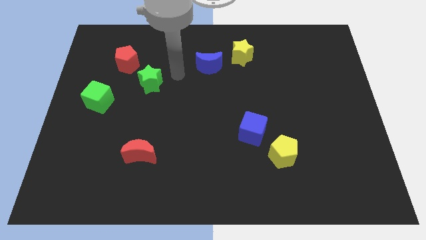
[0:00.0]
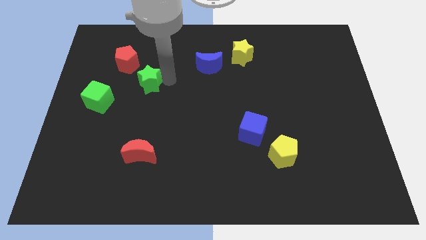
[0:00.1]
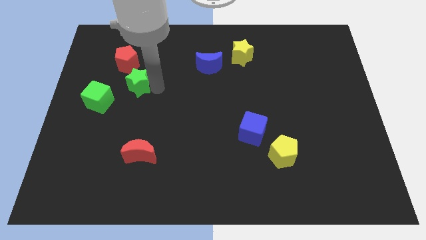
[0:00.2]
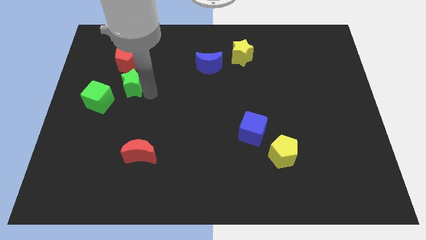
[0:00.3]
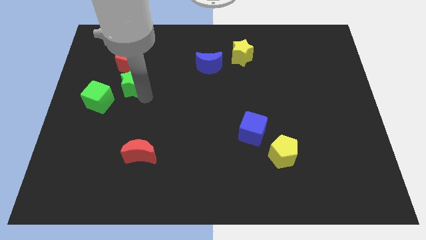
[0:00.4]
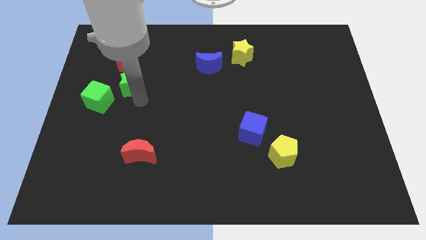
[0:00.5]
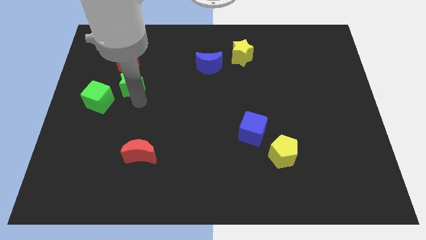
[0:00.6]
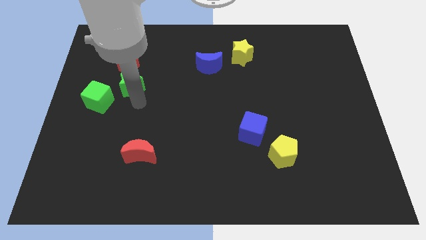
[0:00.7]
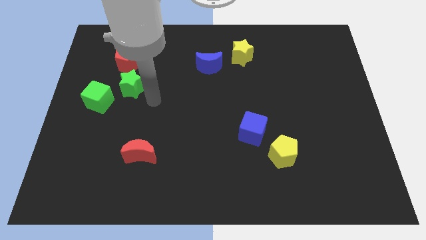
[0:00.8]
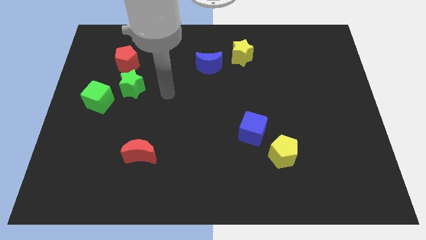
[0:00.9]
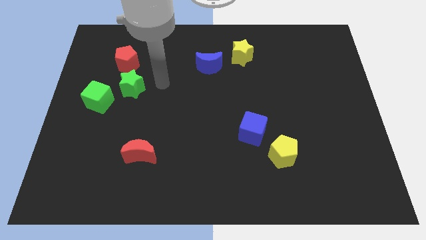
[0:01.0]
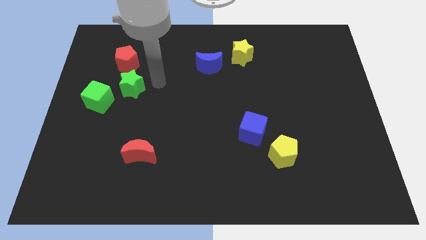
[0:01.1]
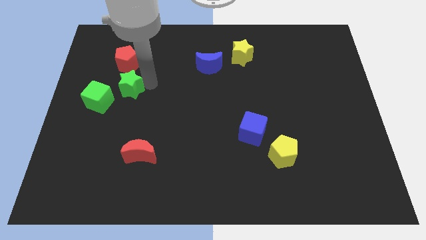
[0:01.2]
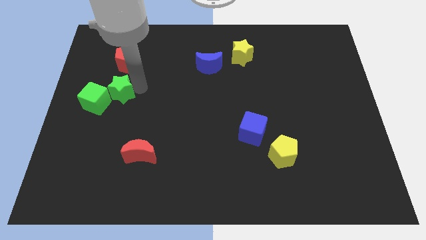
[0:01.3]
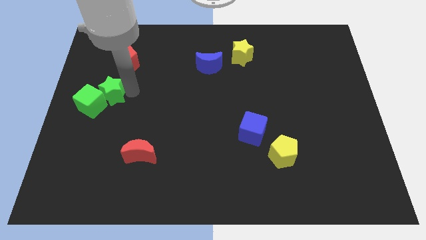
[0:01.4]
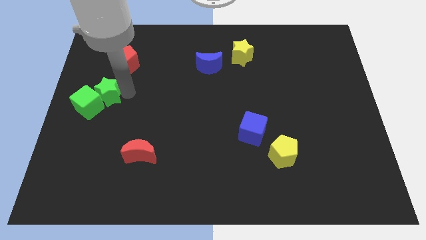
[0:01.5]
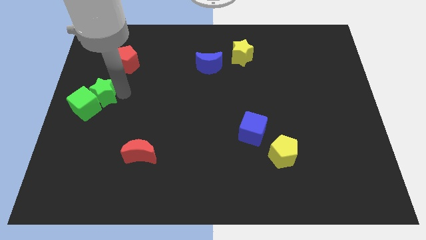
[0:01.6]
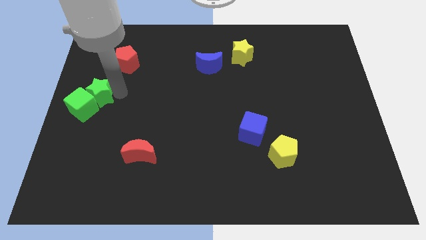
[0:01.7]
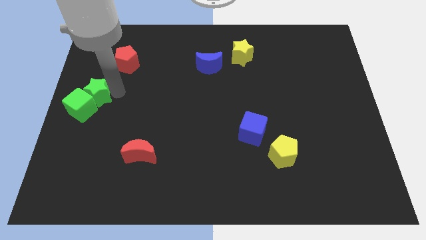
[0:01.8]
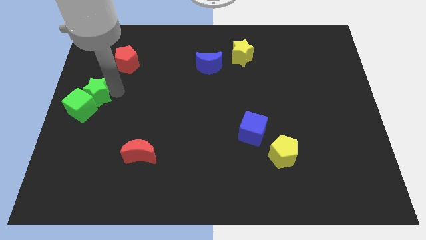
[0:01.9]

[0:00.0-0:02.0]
push the green star into the green cube

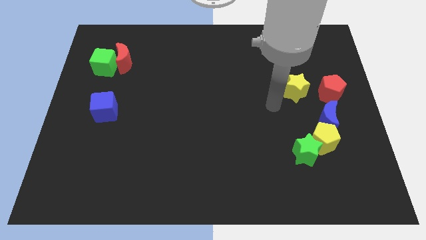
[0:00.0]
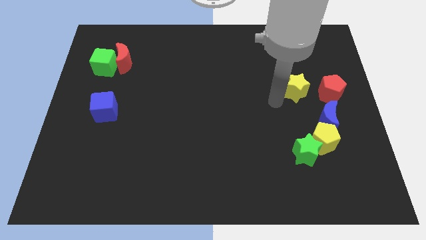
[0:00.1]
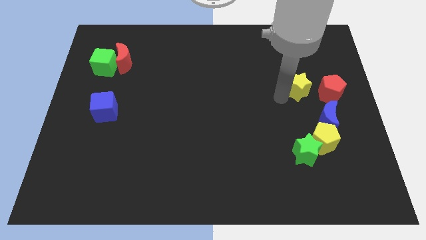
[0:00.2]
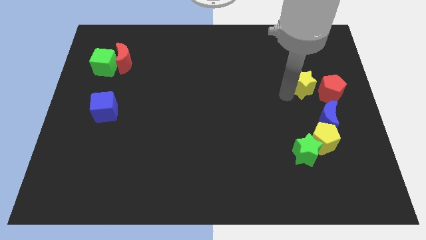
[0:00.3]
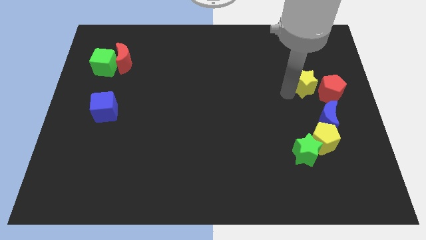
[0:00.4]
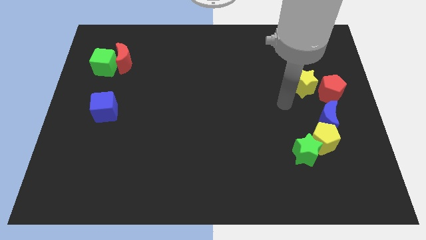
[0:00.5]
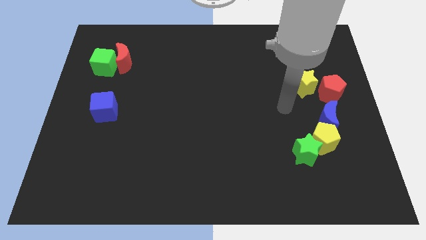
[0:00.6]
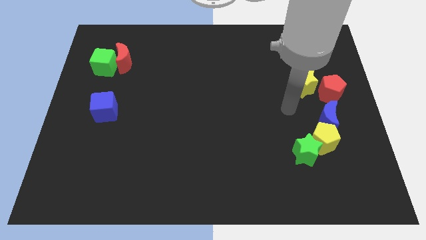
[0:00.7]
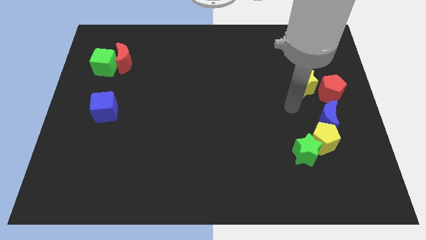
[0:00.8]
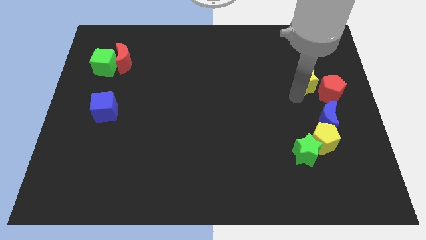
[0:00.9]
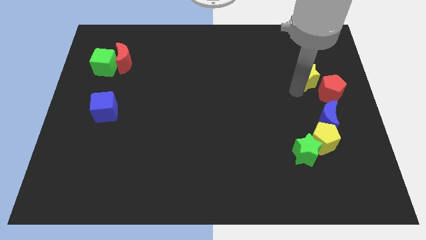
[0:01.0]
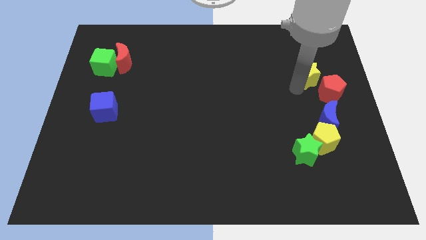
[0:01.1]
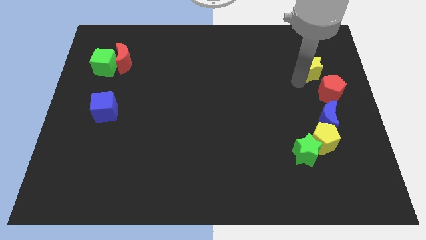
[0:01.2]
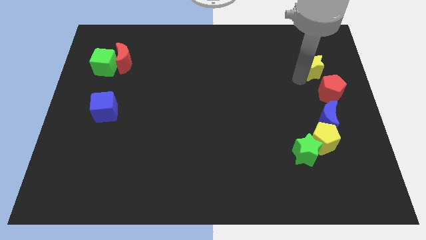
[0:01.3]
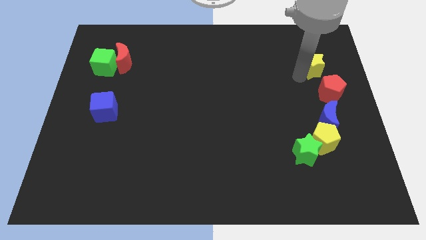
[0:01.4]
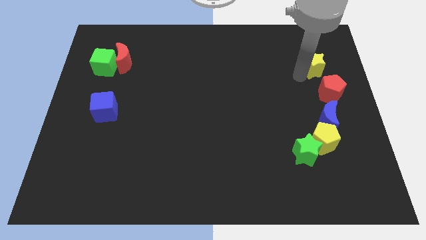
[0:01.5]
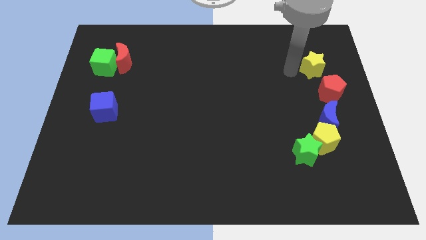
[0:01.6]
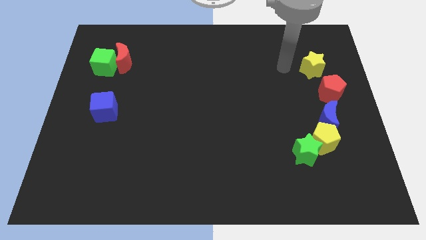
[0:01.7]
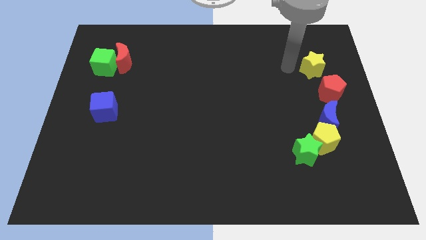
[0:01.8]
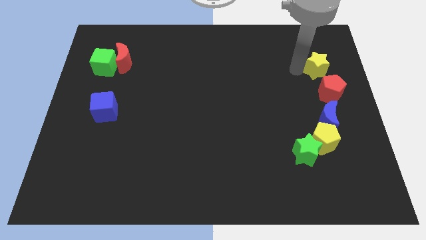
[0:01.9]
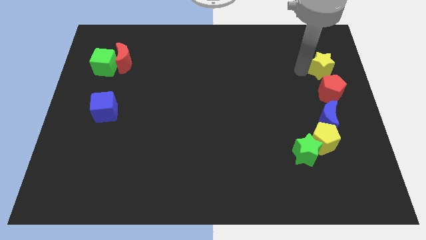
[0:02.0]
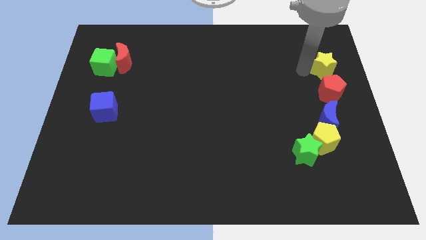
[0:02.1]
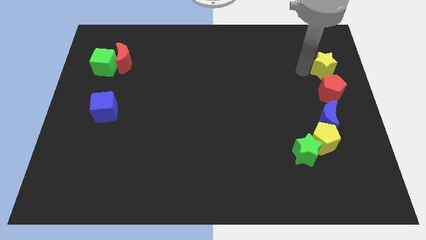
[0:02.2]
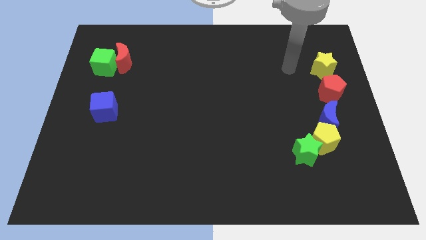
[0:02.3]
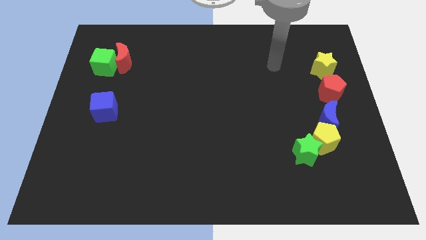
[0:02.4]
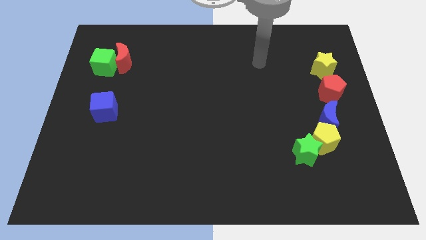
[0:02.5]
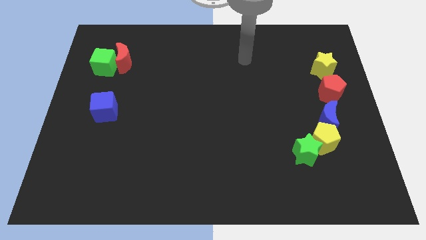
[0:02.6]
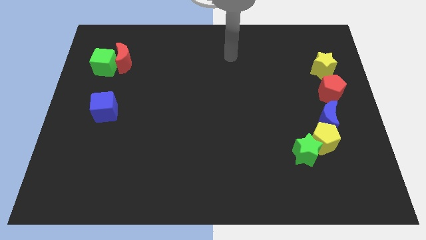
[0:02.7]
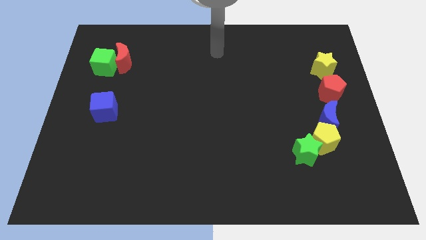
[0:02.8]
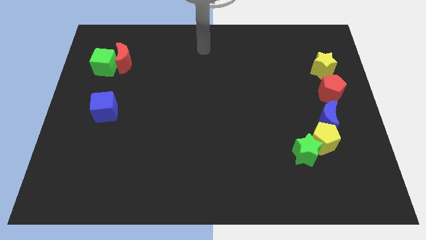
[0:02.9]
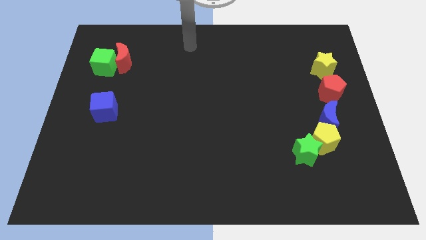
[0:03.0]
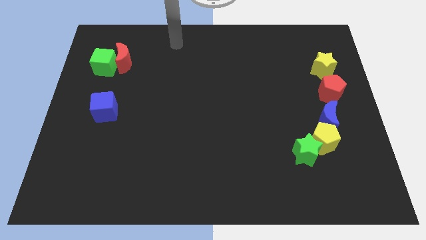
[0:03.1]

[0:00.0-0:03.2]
push yellow star towards the red pentagon

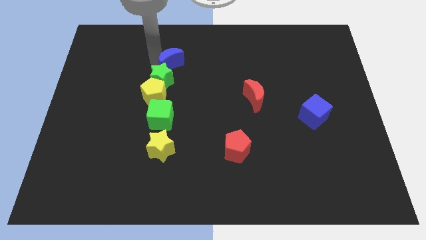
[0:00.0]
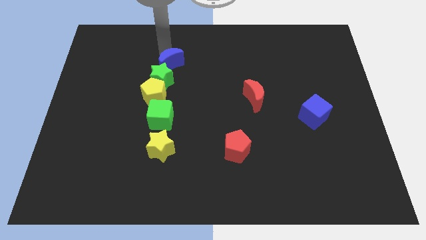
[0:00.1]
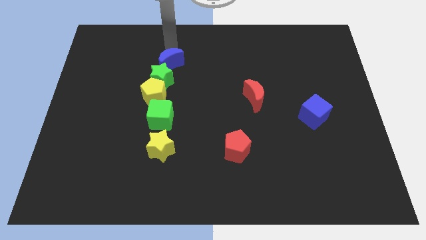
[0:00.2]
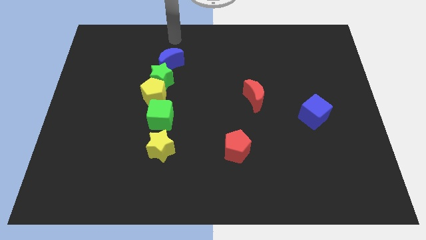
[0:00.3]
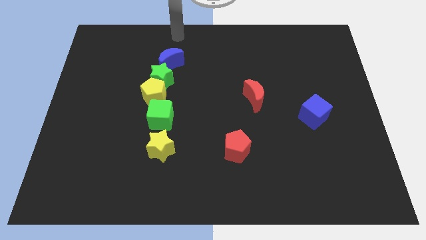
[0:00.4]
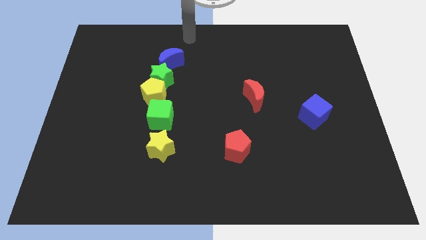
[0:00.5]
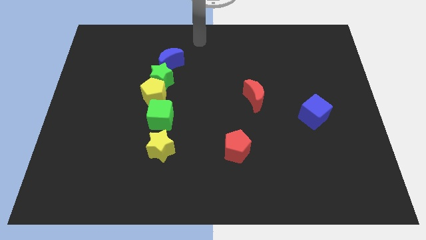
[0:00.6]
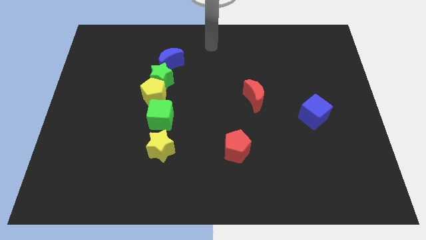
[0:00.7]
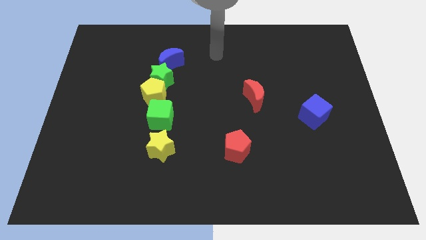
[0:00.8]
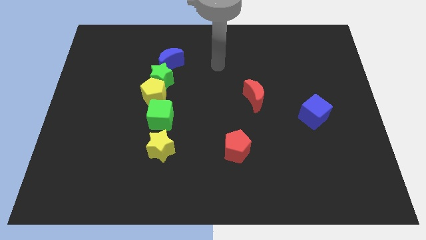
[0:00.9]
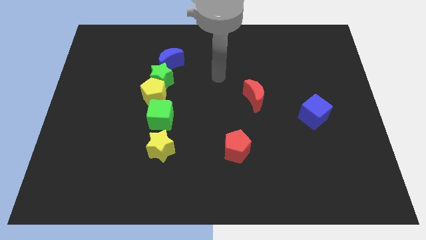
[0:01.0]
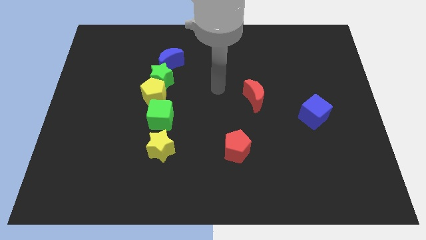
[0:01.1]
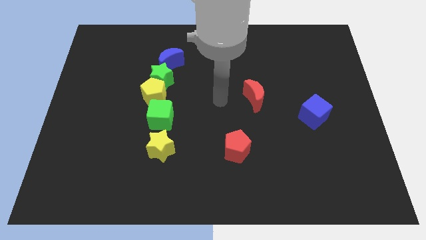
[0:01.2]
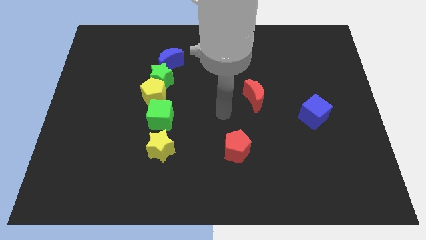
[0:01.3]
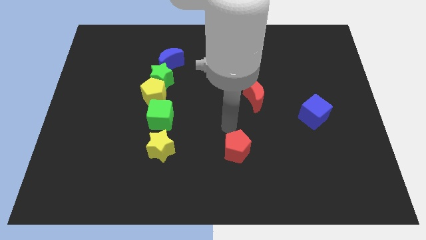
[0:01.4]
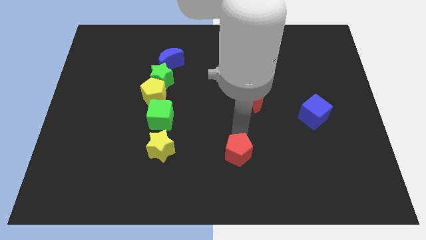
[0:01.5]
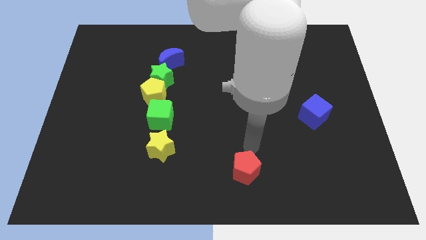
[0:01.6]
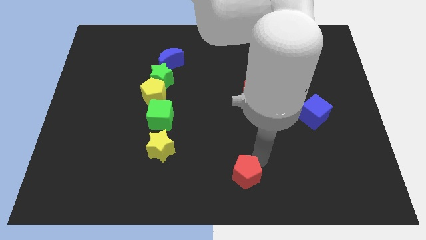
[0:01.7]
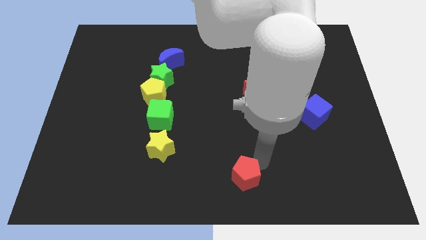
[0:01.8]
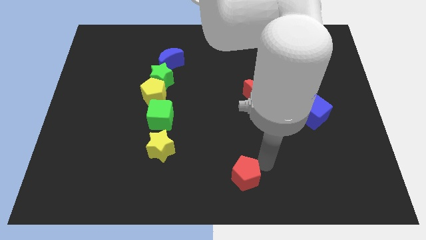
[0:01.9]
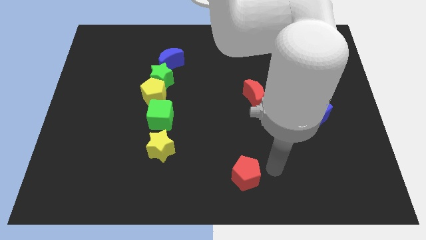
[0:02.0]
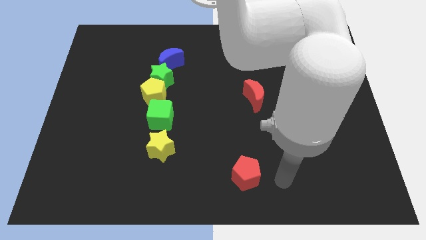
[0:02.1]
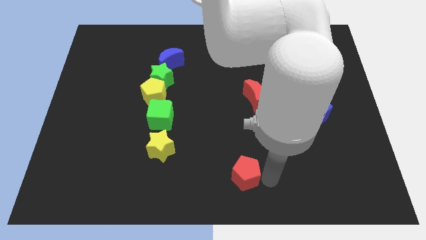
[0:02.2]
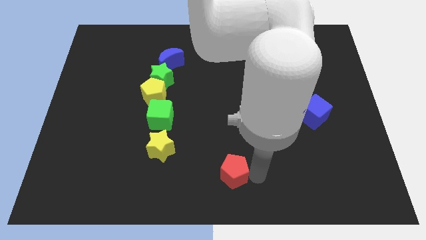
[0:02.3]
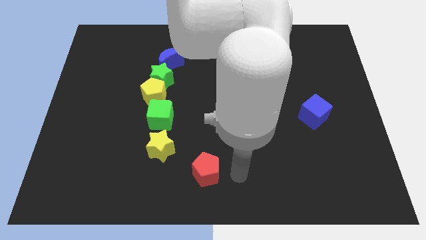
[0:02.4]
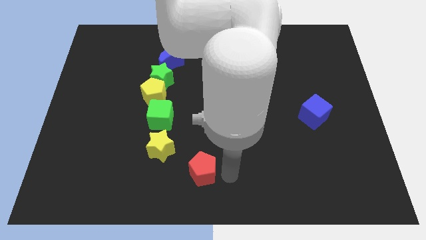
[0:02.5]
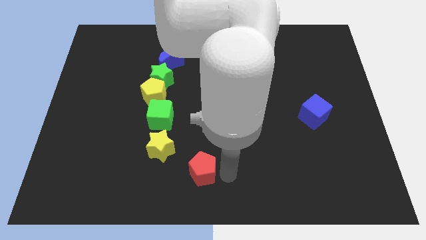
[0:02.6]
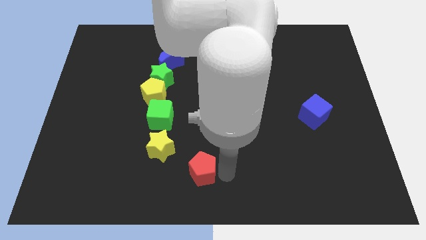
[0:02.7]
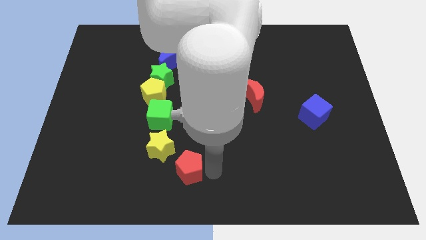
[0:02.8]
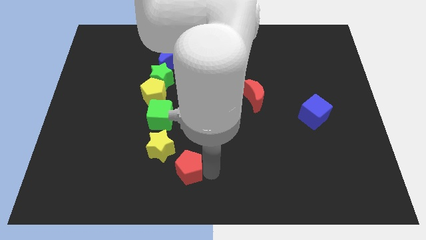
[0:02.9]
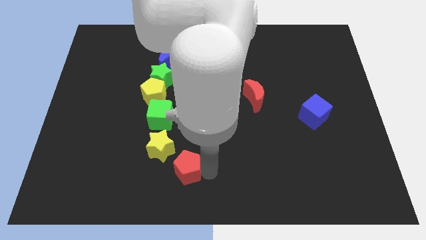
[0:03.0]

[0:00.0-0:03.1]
push the red pentagon close to the right side of the yellow star

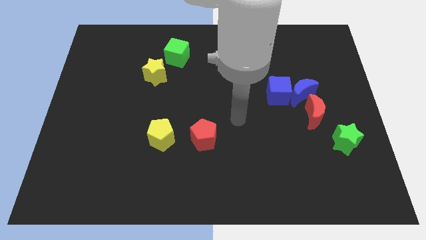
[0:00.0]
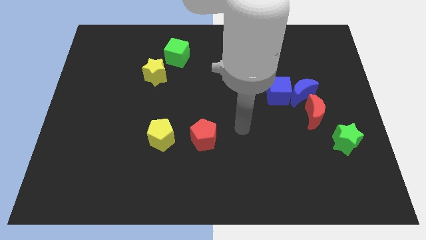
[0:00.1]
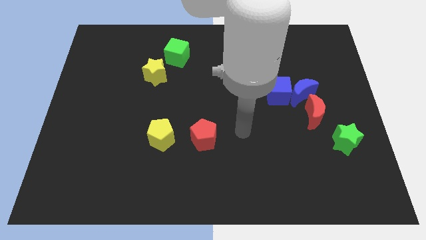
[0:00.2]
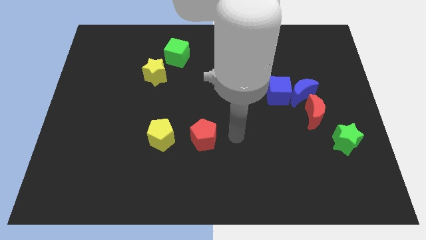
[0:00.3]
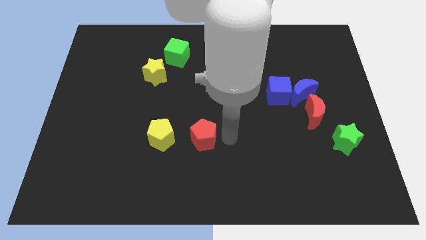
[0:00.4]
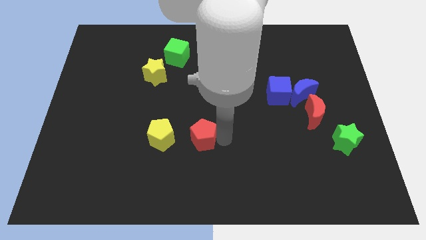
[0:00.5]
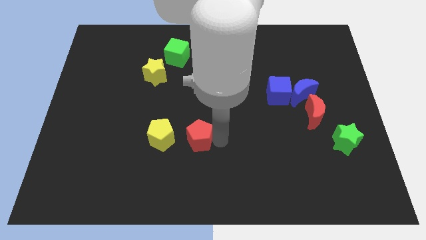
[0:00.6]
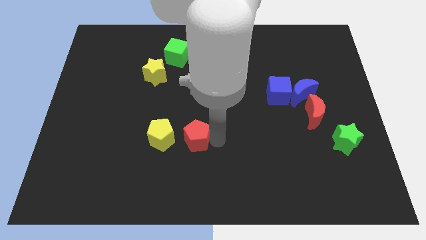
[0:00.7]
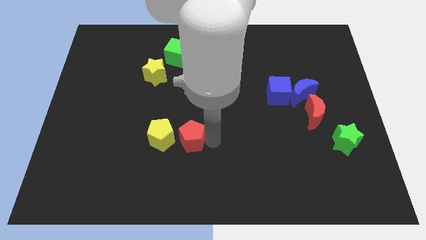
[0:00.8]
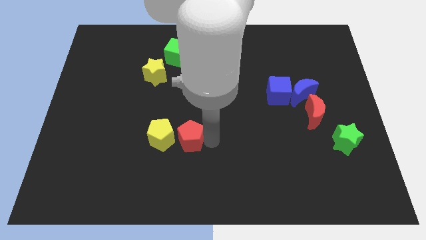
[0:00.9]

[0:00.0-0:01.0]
push the red pentagon into the yellow pentagon
